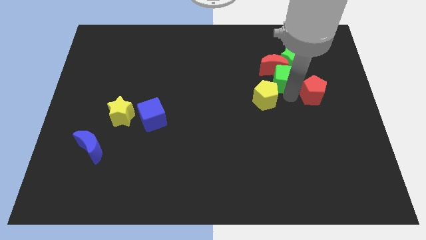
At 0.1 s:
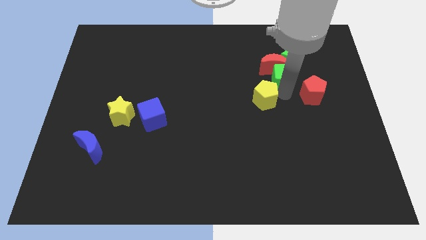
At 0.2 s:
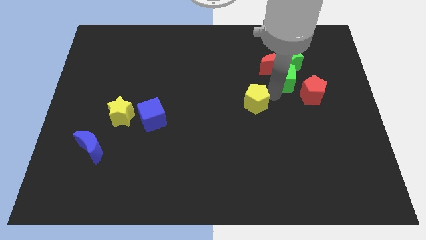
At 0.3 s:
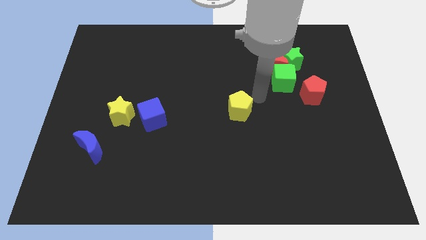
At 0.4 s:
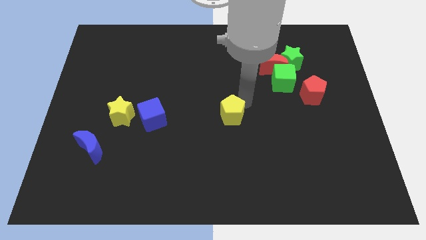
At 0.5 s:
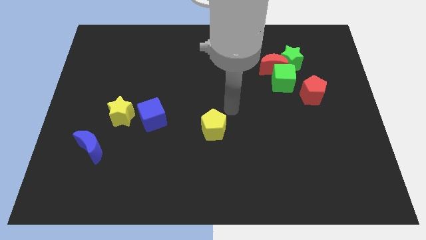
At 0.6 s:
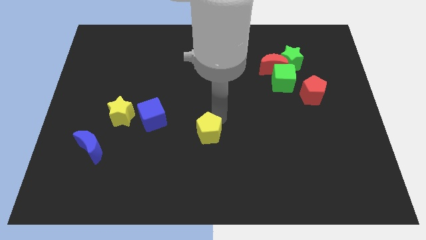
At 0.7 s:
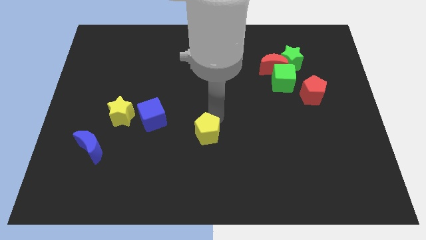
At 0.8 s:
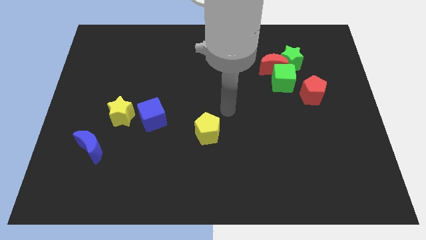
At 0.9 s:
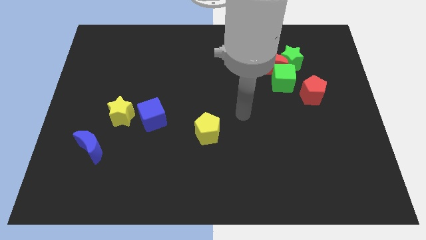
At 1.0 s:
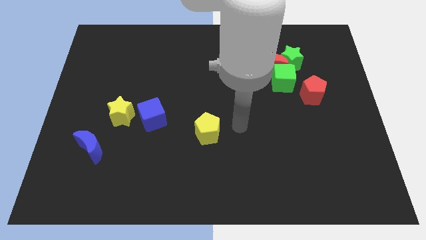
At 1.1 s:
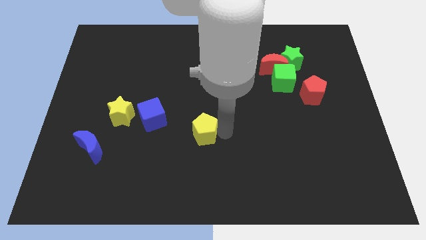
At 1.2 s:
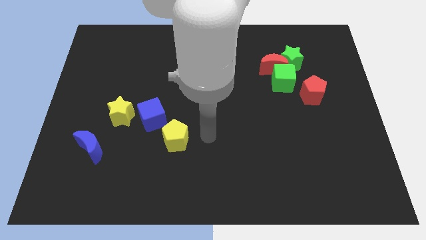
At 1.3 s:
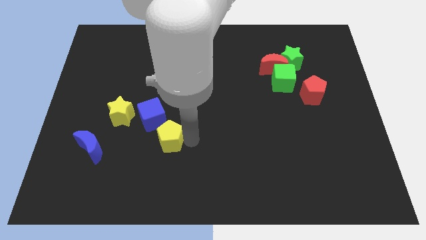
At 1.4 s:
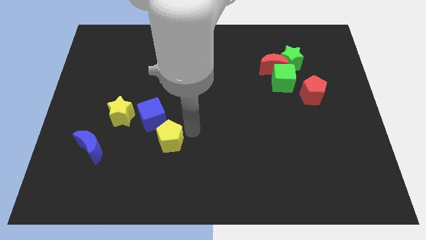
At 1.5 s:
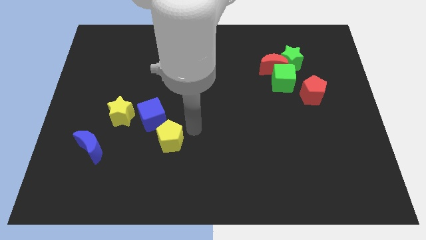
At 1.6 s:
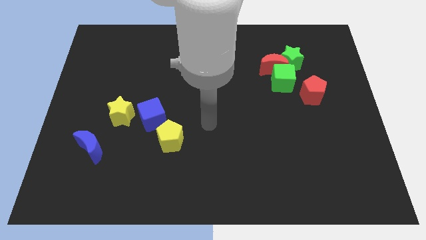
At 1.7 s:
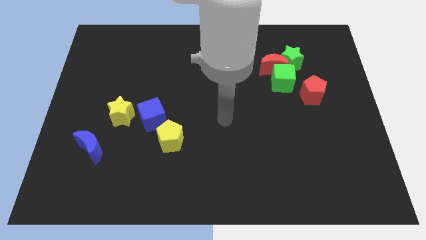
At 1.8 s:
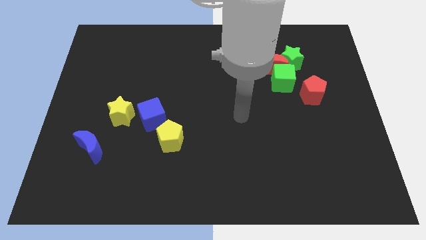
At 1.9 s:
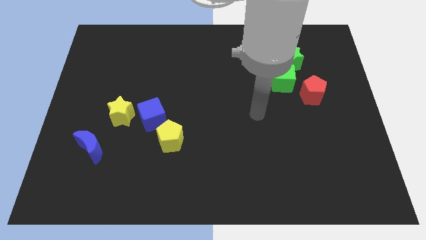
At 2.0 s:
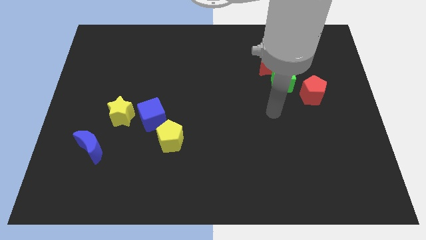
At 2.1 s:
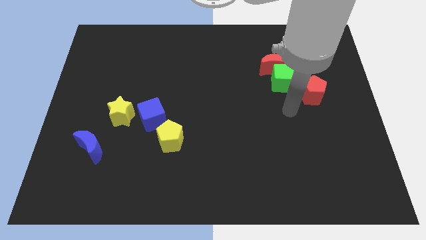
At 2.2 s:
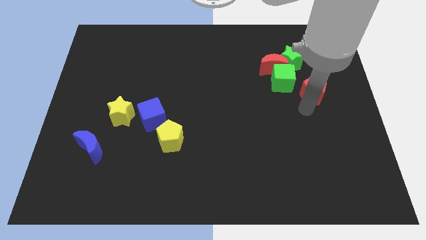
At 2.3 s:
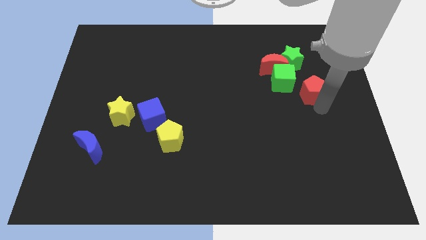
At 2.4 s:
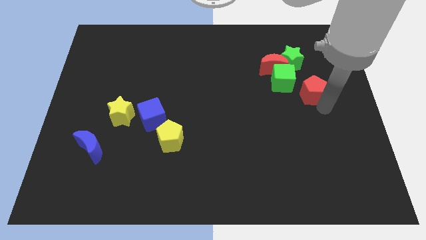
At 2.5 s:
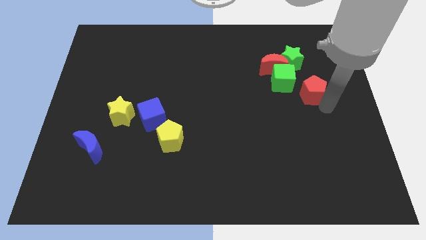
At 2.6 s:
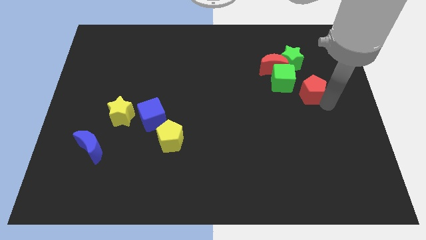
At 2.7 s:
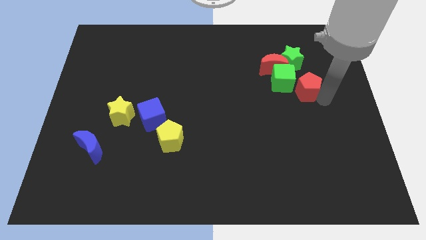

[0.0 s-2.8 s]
slide the yellow pentagon below the blue cube

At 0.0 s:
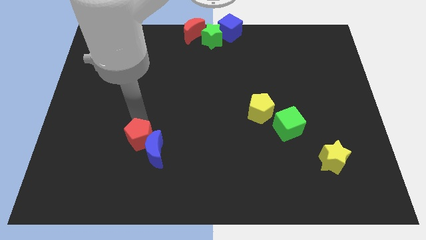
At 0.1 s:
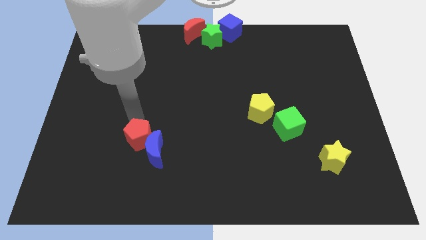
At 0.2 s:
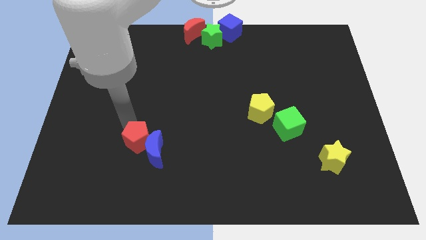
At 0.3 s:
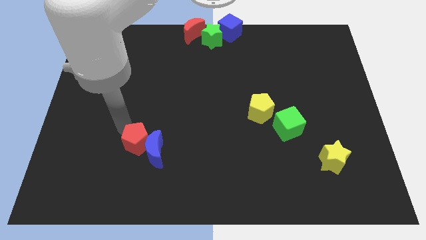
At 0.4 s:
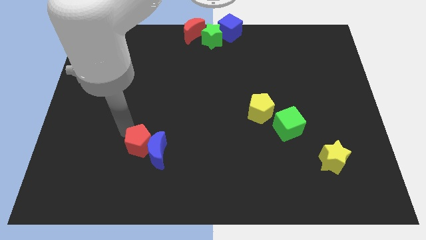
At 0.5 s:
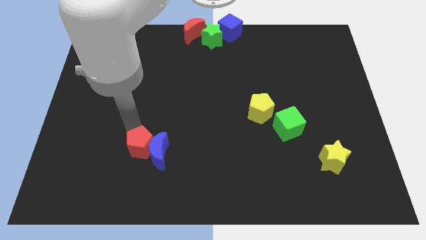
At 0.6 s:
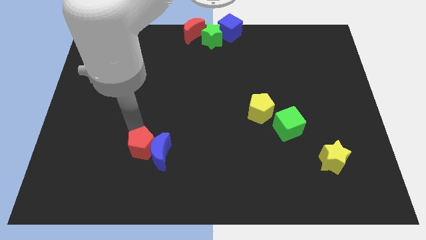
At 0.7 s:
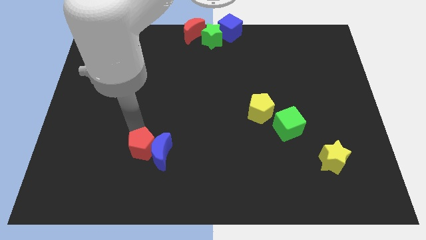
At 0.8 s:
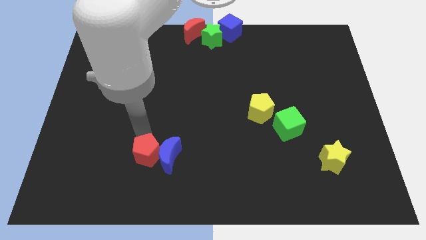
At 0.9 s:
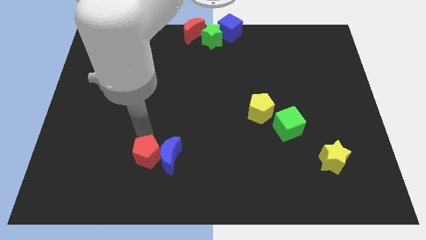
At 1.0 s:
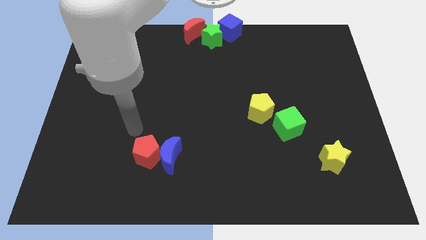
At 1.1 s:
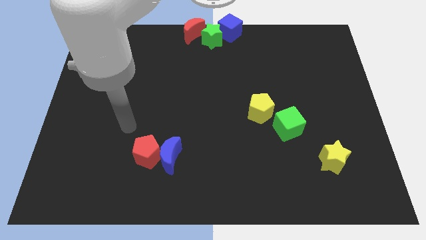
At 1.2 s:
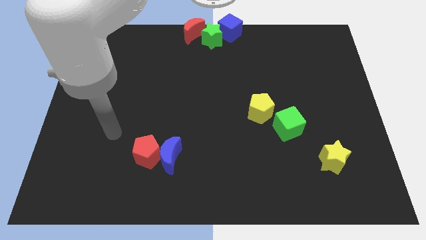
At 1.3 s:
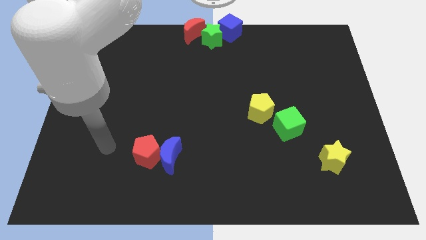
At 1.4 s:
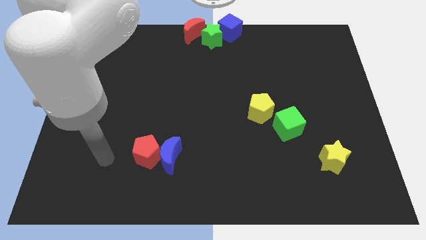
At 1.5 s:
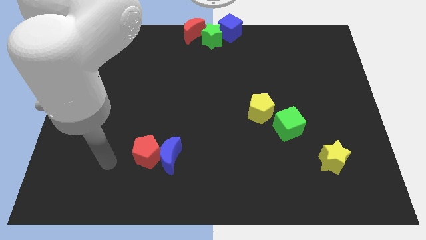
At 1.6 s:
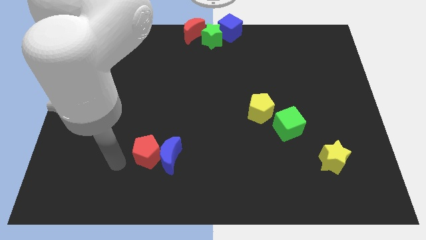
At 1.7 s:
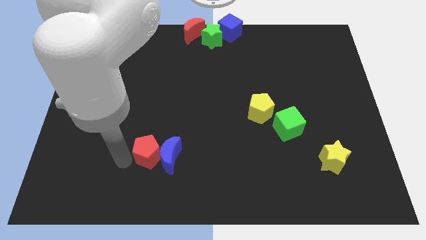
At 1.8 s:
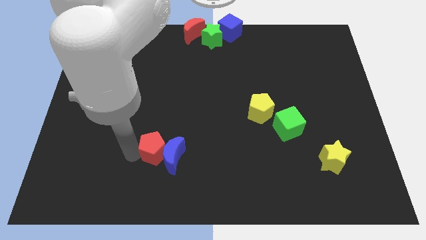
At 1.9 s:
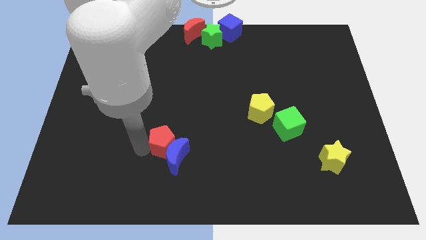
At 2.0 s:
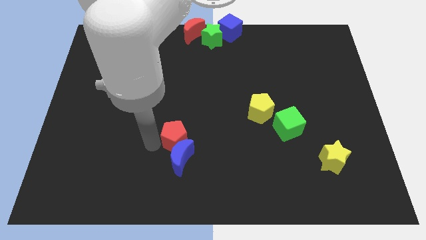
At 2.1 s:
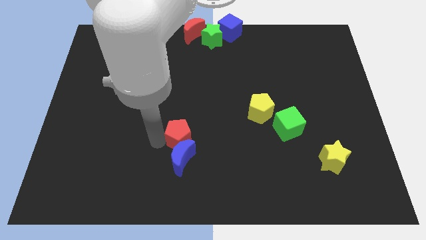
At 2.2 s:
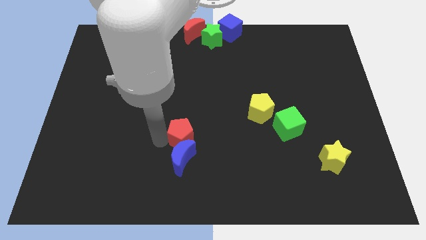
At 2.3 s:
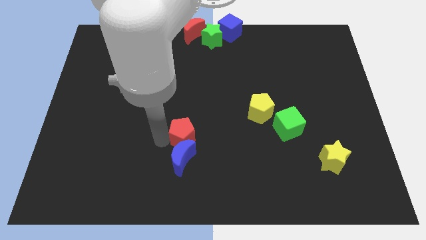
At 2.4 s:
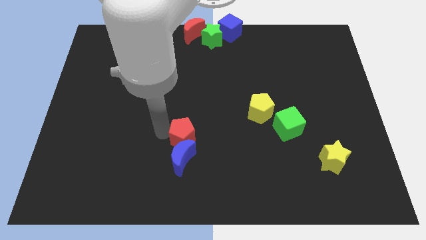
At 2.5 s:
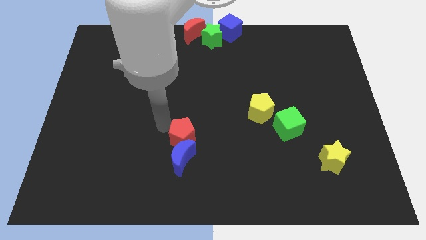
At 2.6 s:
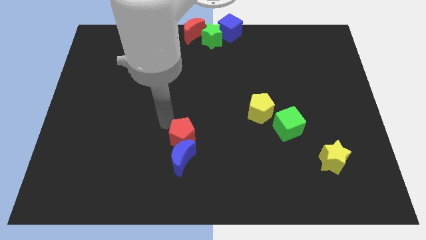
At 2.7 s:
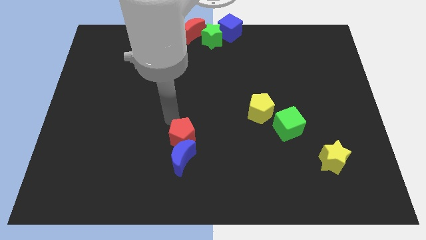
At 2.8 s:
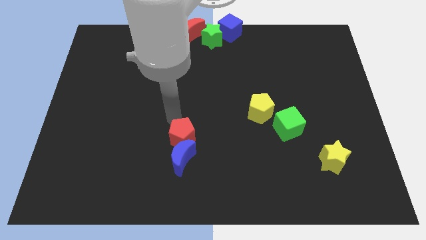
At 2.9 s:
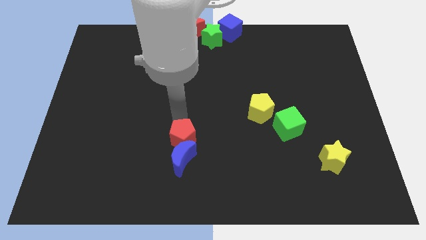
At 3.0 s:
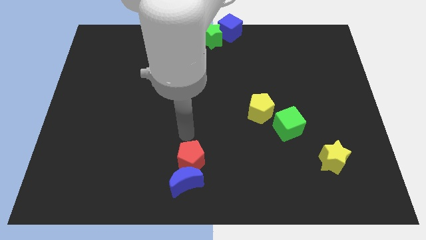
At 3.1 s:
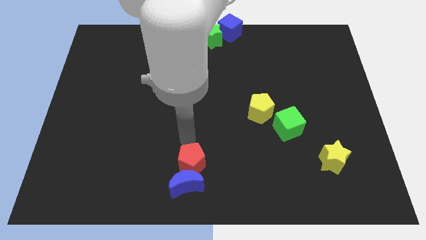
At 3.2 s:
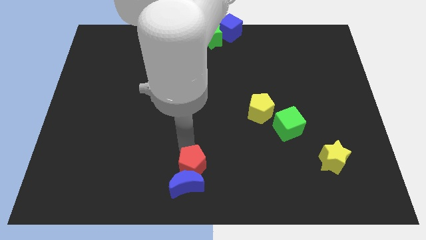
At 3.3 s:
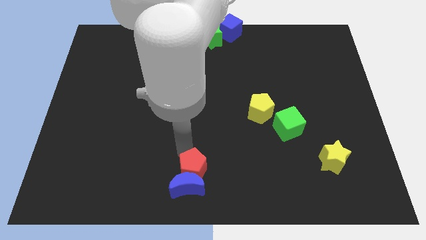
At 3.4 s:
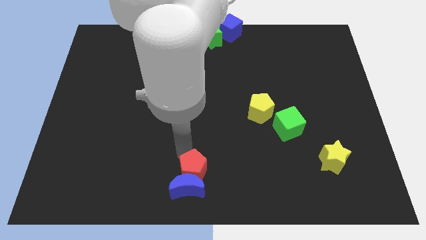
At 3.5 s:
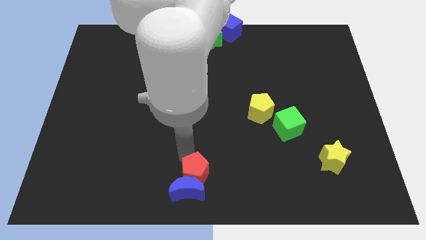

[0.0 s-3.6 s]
place red pentagon to the bottom center

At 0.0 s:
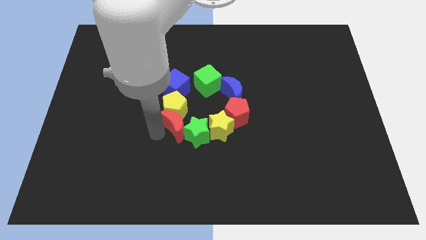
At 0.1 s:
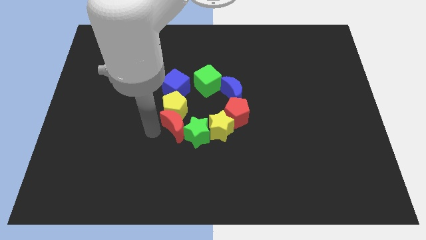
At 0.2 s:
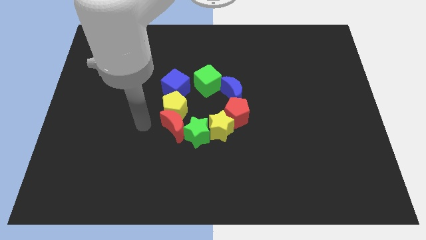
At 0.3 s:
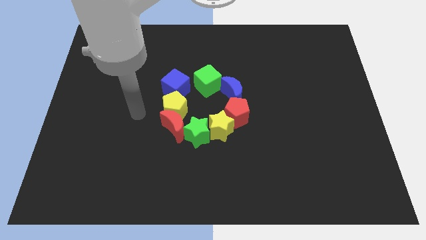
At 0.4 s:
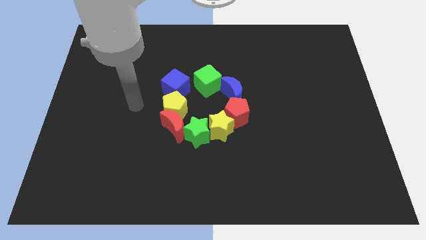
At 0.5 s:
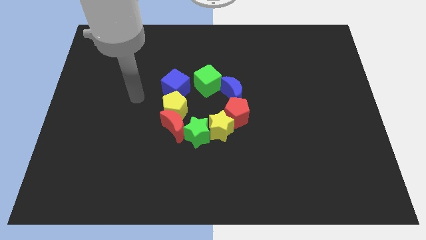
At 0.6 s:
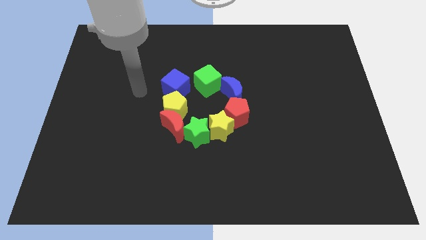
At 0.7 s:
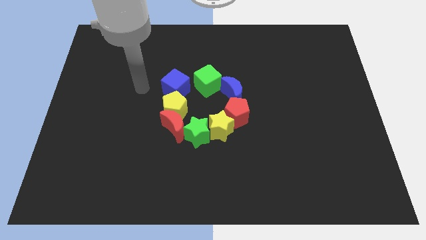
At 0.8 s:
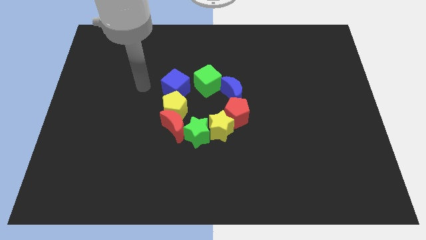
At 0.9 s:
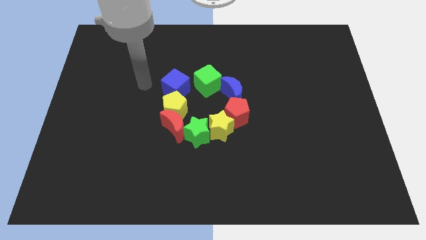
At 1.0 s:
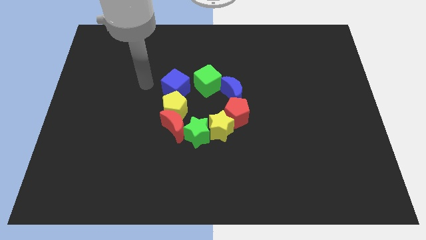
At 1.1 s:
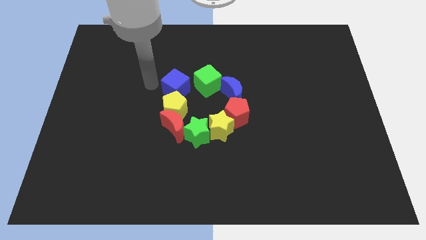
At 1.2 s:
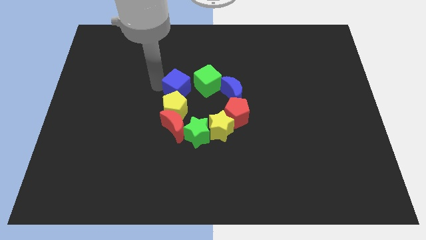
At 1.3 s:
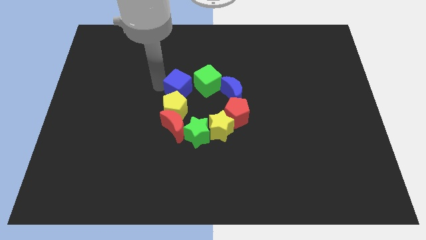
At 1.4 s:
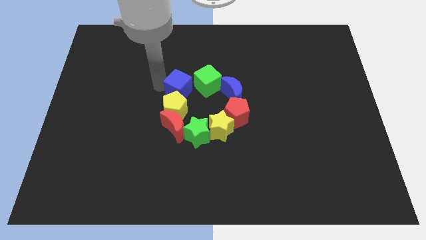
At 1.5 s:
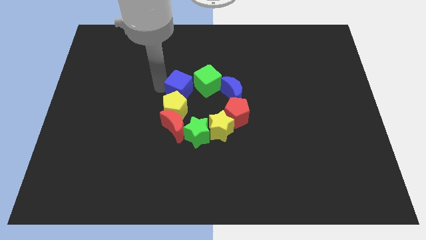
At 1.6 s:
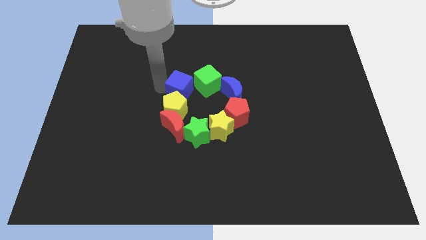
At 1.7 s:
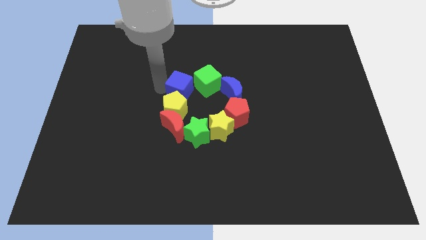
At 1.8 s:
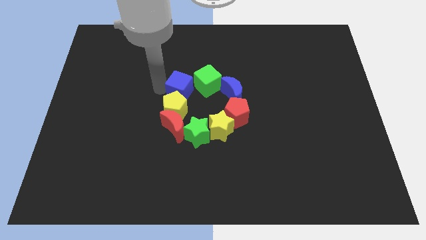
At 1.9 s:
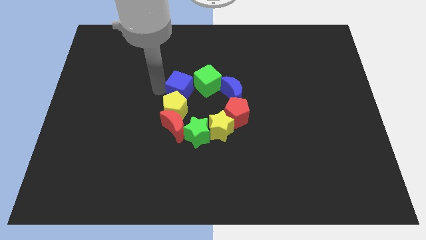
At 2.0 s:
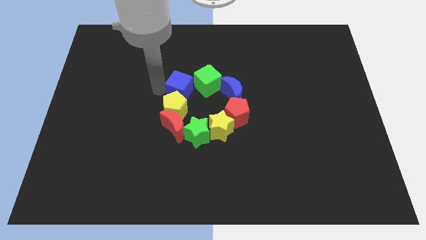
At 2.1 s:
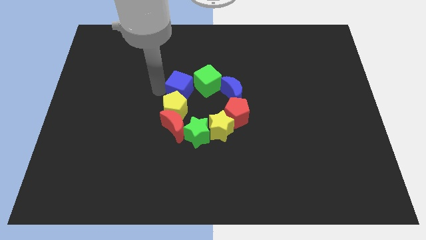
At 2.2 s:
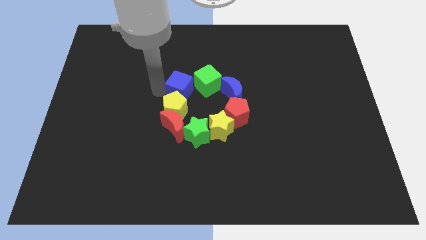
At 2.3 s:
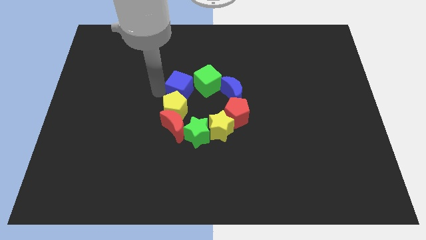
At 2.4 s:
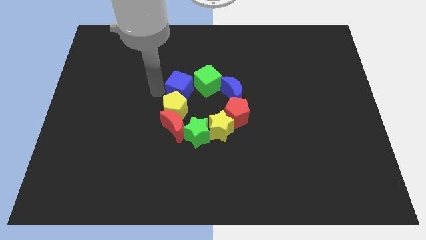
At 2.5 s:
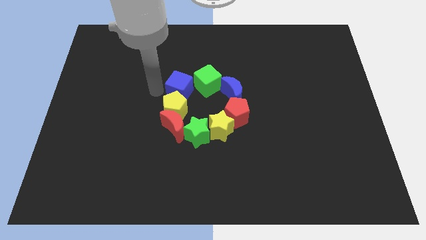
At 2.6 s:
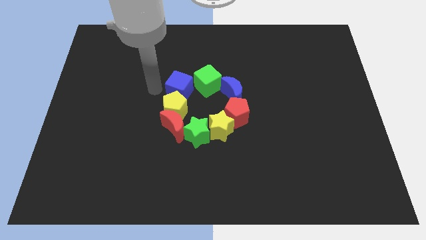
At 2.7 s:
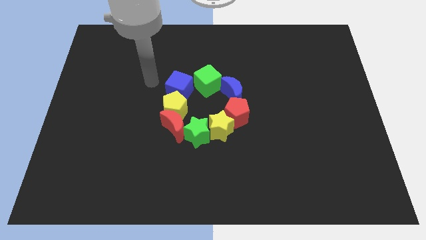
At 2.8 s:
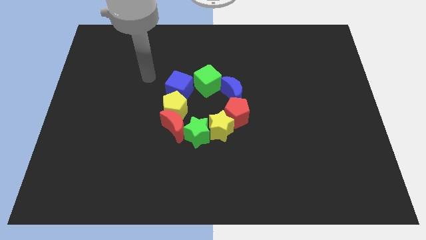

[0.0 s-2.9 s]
push the blue cube slightly to the right side
